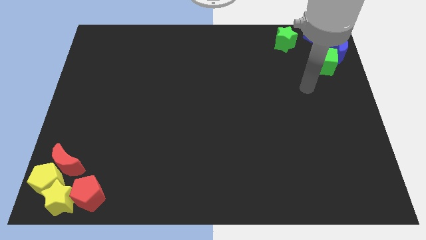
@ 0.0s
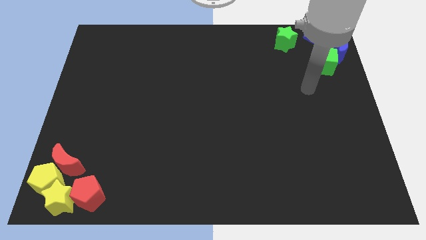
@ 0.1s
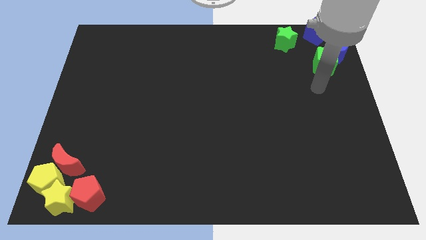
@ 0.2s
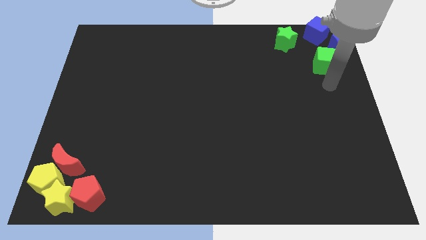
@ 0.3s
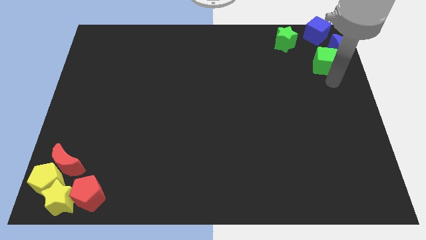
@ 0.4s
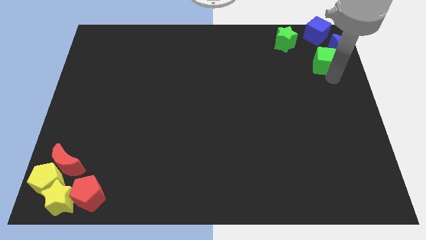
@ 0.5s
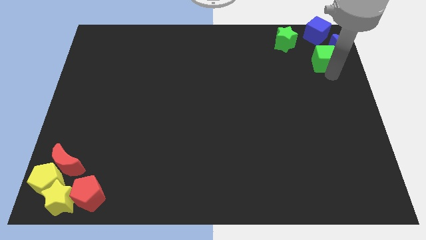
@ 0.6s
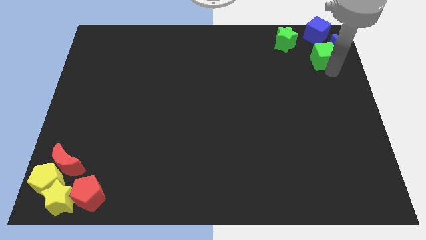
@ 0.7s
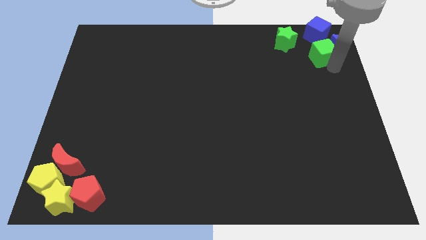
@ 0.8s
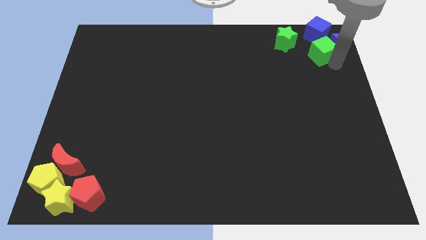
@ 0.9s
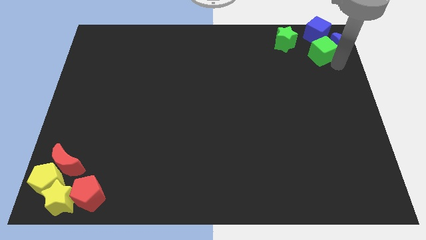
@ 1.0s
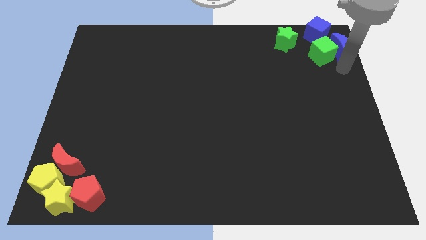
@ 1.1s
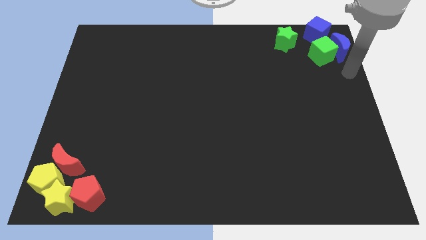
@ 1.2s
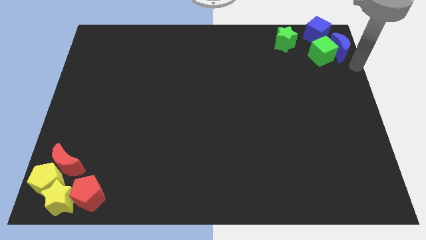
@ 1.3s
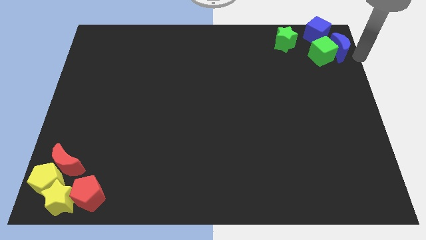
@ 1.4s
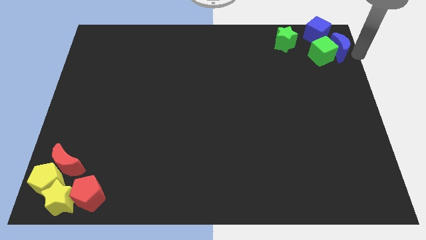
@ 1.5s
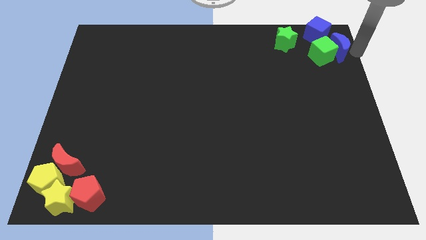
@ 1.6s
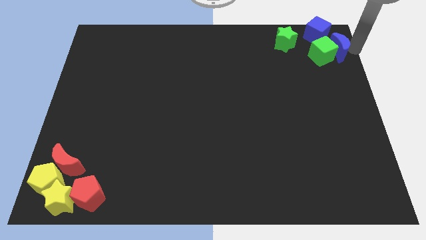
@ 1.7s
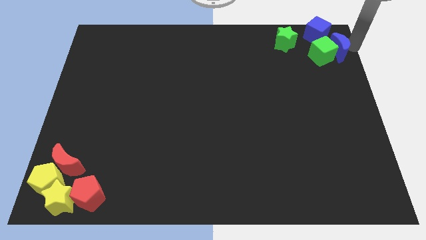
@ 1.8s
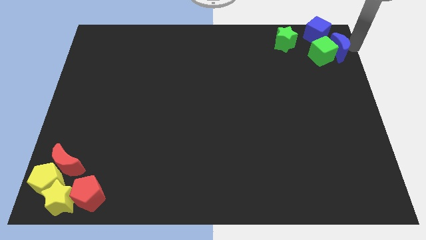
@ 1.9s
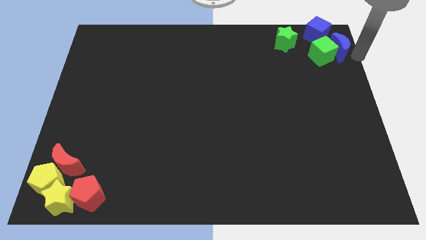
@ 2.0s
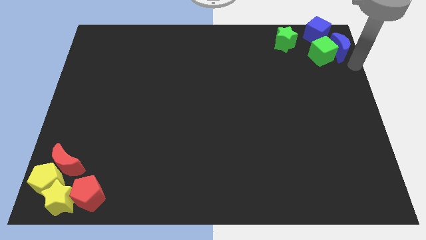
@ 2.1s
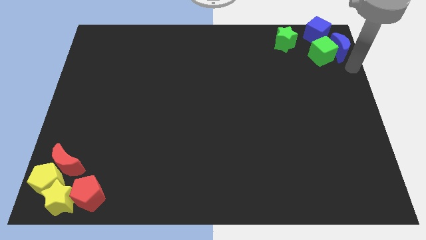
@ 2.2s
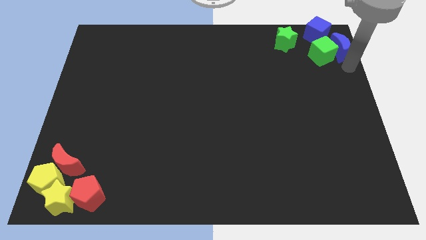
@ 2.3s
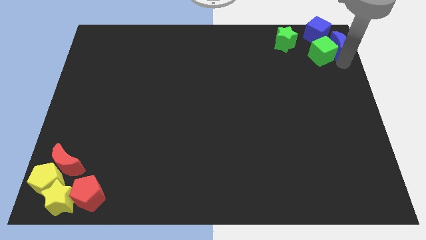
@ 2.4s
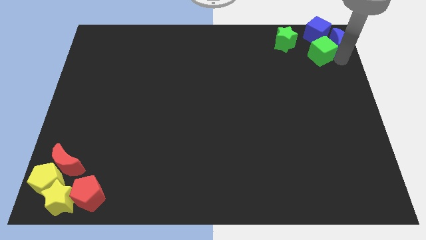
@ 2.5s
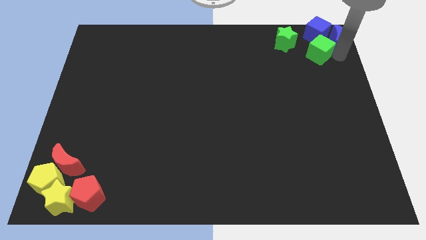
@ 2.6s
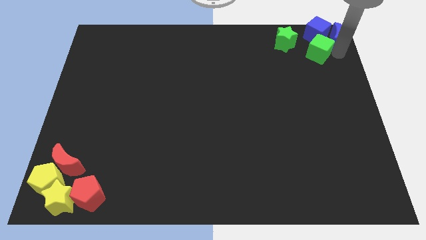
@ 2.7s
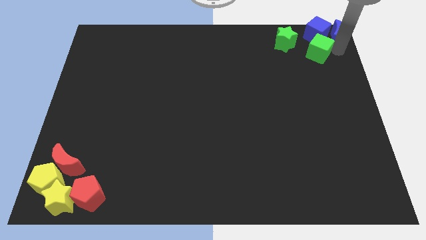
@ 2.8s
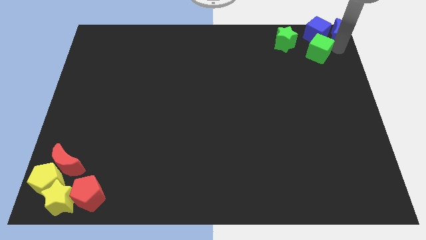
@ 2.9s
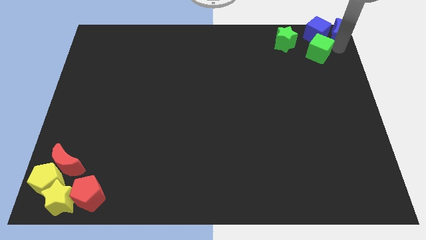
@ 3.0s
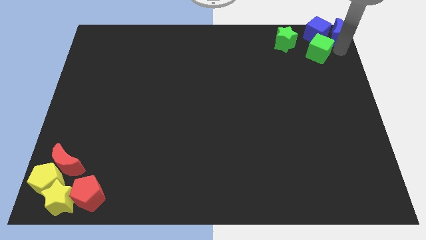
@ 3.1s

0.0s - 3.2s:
push the blue blocks to the top side of the green cube

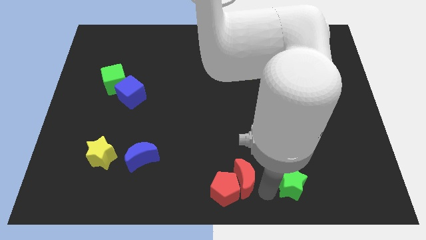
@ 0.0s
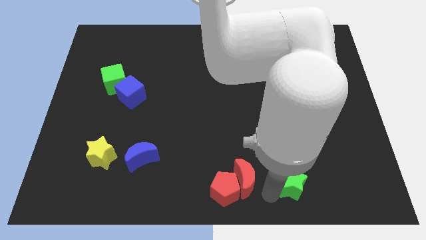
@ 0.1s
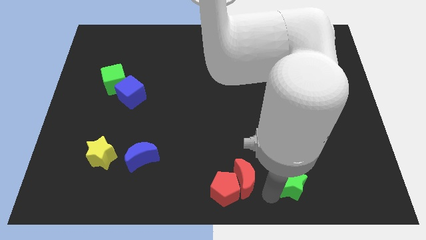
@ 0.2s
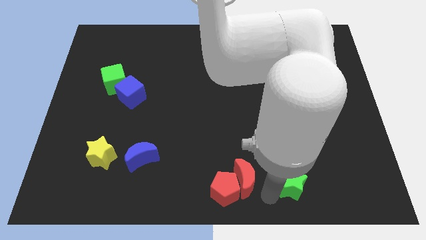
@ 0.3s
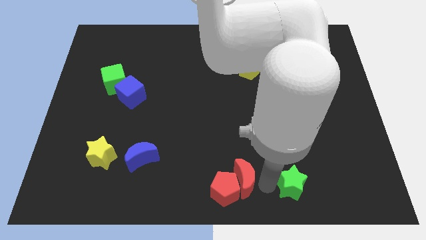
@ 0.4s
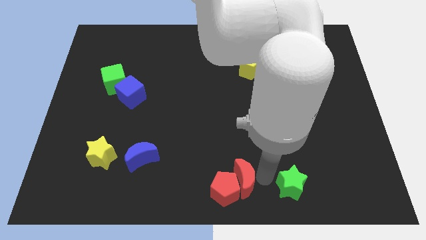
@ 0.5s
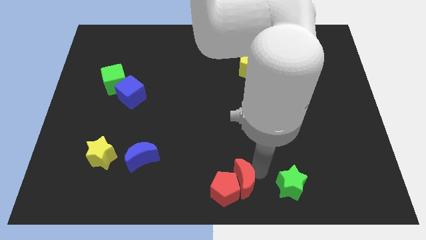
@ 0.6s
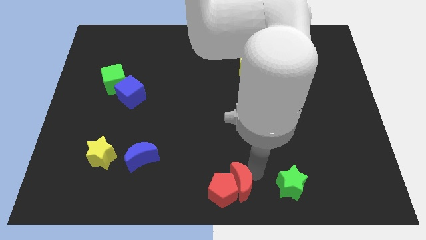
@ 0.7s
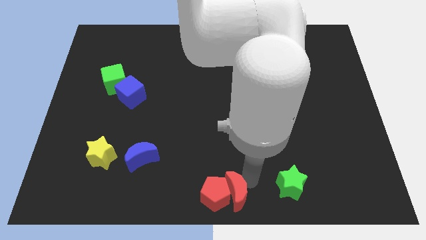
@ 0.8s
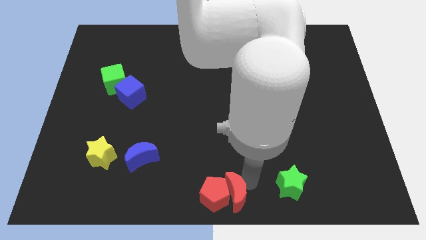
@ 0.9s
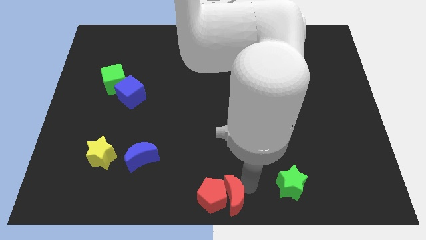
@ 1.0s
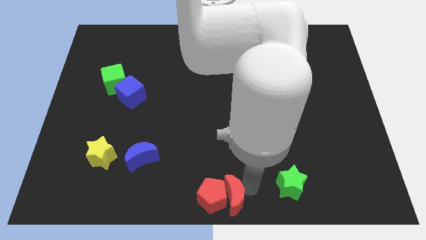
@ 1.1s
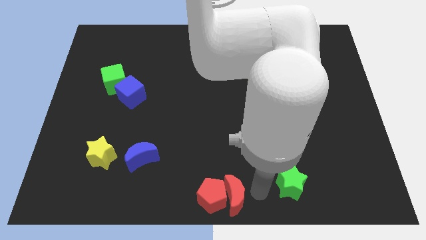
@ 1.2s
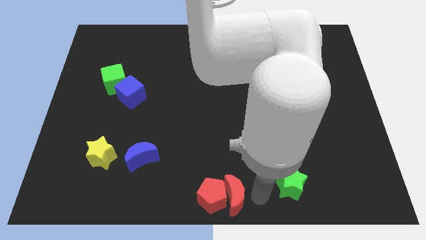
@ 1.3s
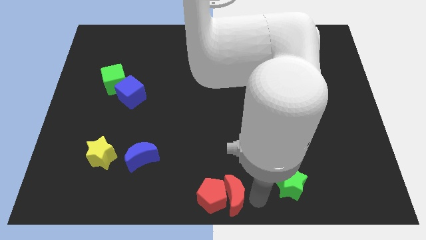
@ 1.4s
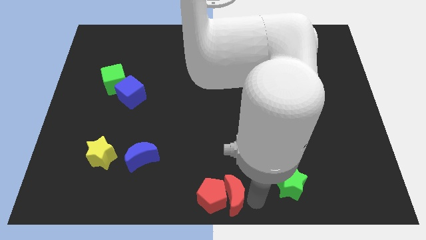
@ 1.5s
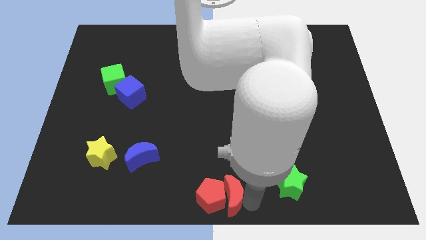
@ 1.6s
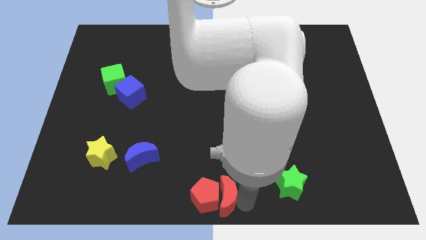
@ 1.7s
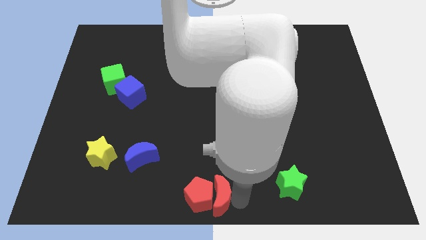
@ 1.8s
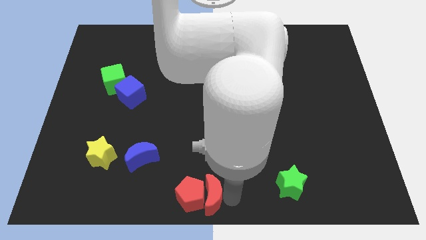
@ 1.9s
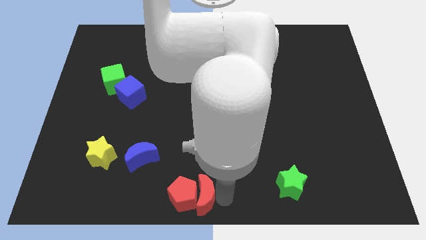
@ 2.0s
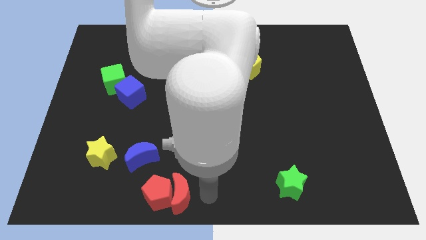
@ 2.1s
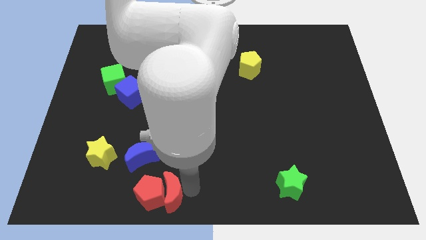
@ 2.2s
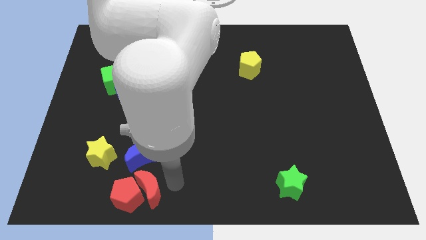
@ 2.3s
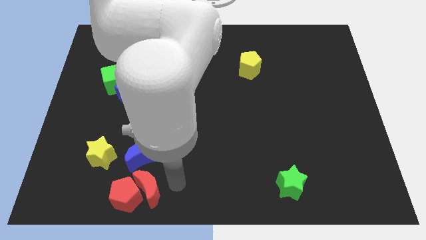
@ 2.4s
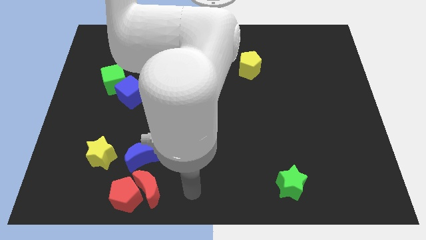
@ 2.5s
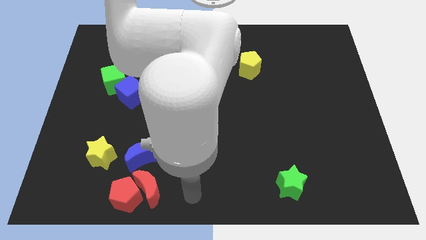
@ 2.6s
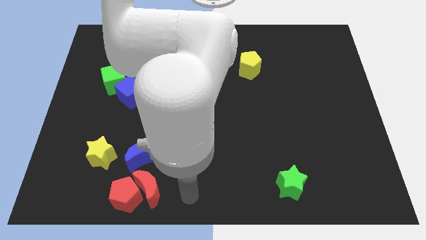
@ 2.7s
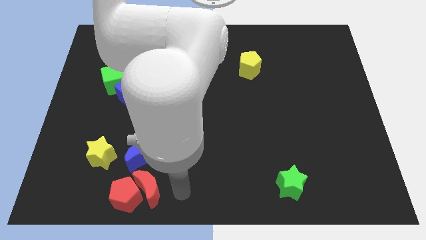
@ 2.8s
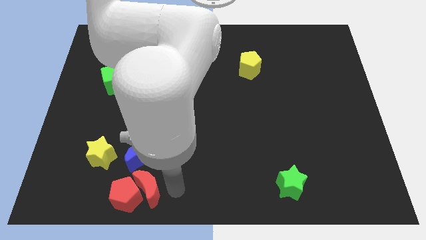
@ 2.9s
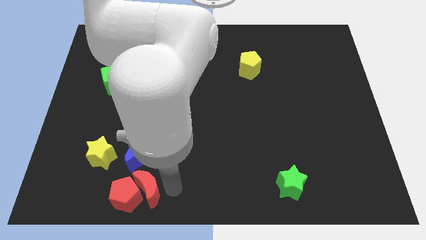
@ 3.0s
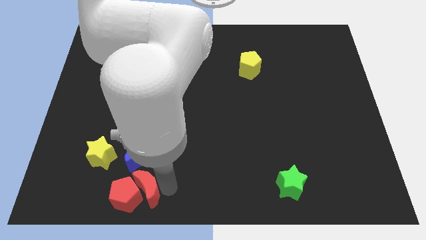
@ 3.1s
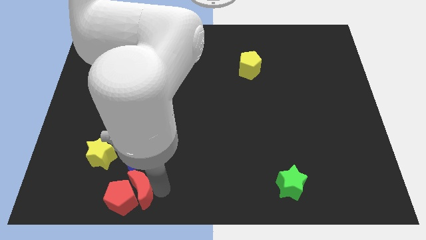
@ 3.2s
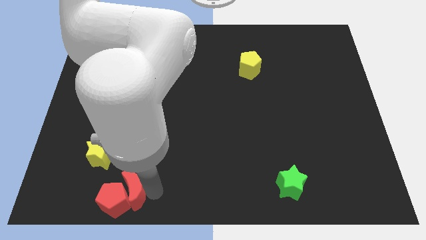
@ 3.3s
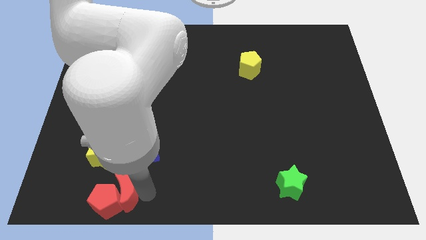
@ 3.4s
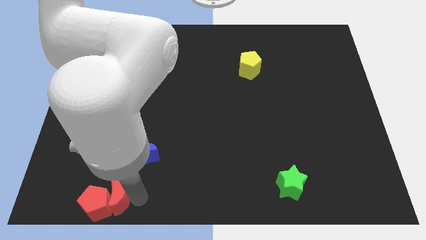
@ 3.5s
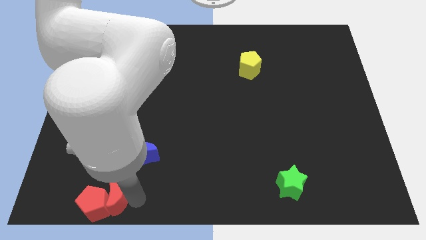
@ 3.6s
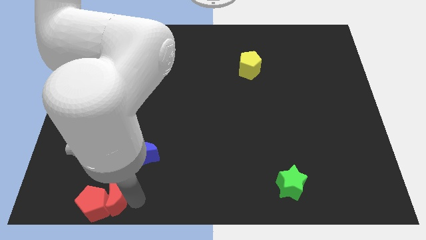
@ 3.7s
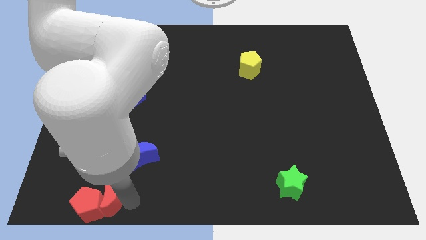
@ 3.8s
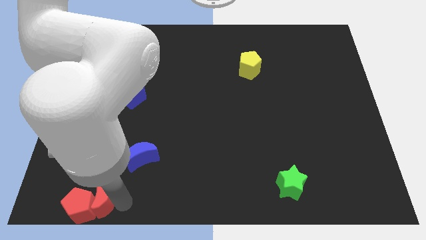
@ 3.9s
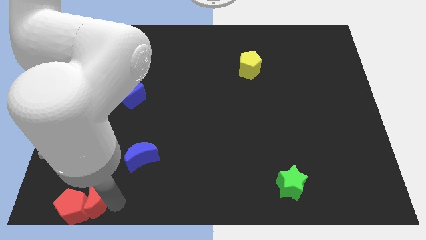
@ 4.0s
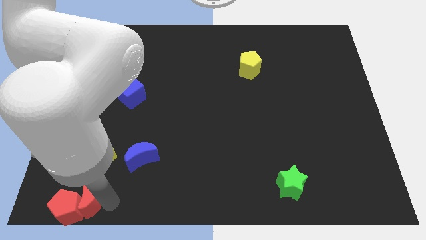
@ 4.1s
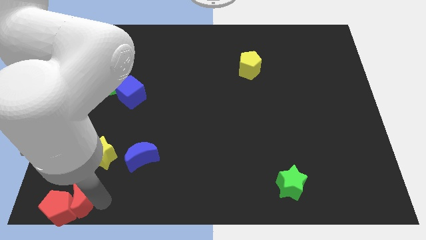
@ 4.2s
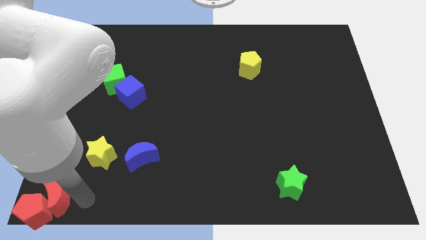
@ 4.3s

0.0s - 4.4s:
move the red blocks towards the bottom left

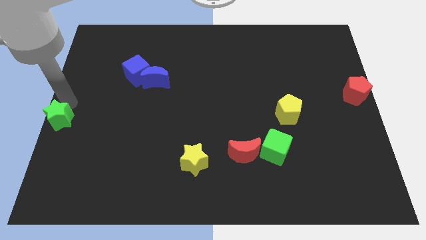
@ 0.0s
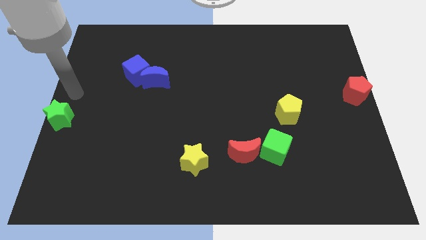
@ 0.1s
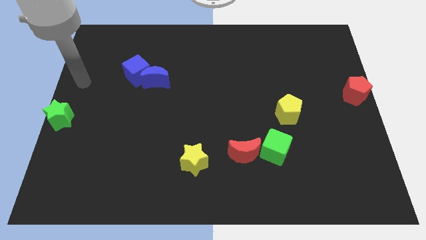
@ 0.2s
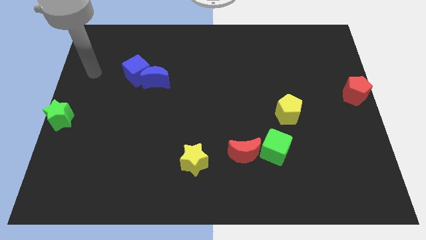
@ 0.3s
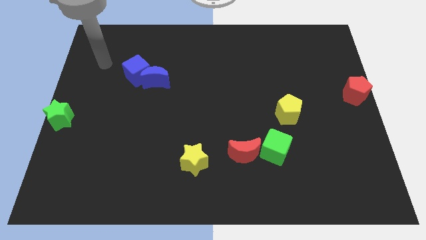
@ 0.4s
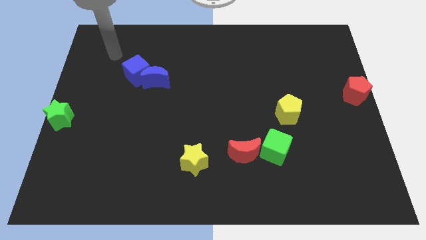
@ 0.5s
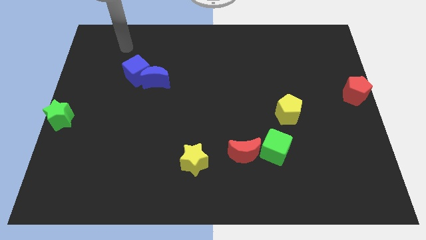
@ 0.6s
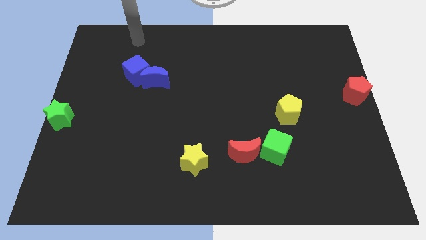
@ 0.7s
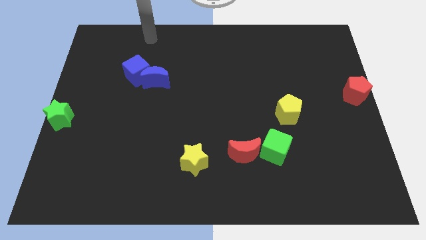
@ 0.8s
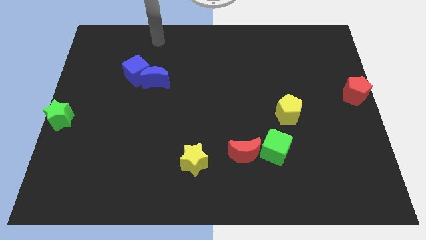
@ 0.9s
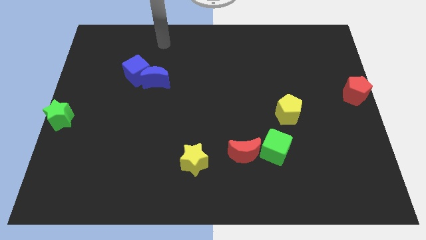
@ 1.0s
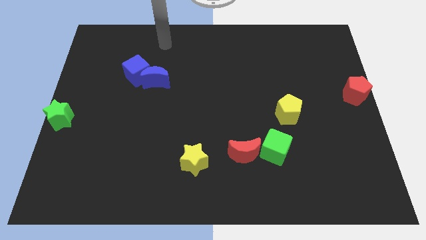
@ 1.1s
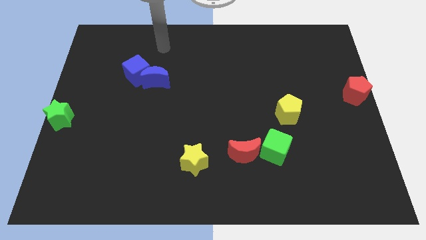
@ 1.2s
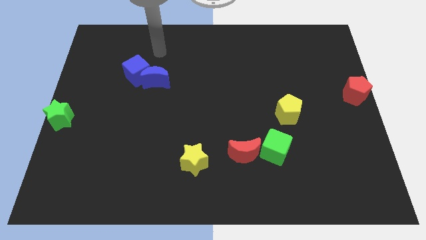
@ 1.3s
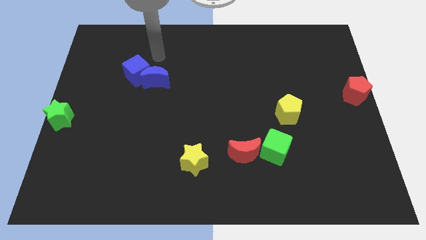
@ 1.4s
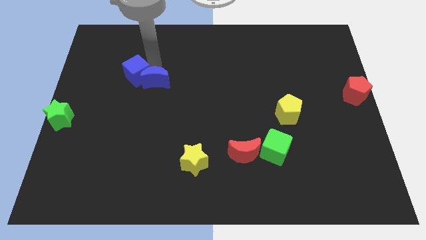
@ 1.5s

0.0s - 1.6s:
point your arm at the top of the blue crescent
